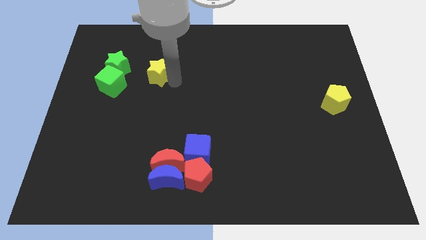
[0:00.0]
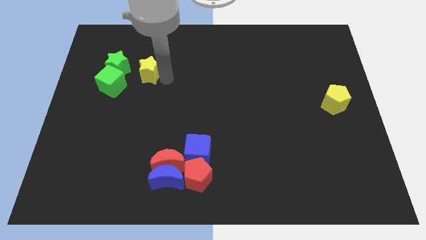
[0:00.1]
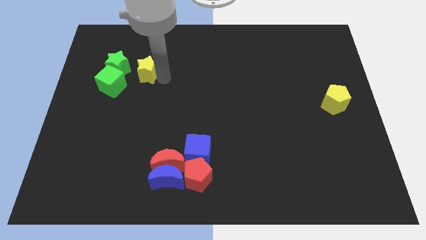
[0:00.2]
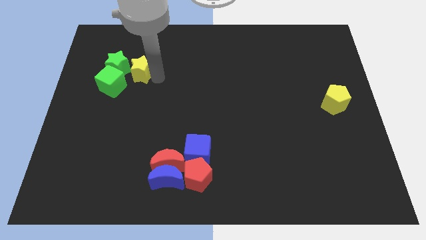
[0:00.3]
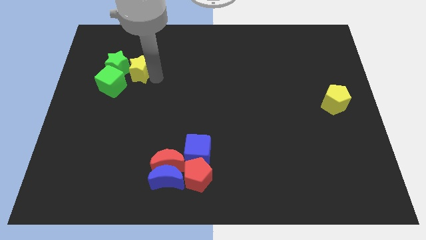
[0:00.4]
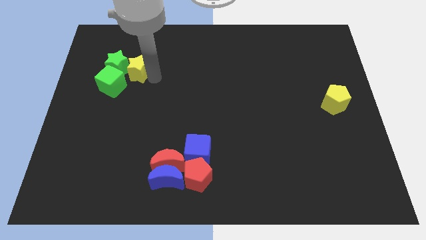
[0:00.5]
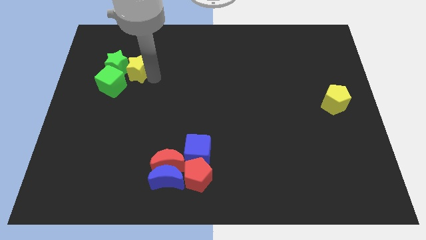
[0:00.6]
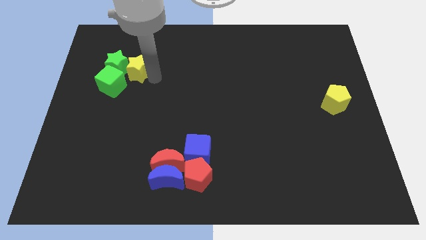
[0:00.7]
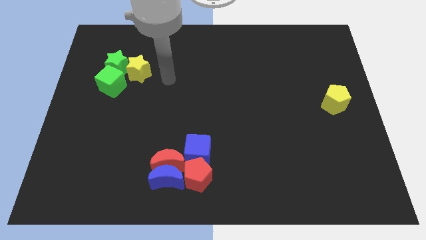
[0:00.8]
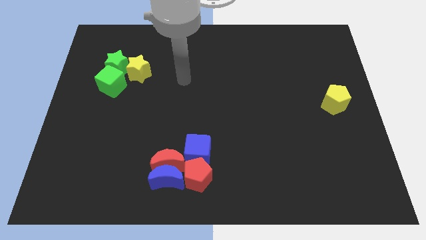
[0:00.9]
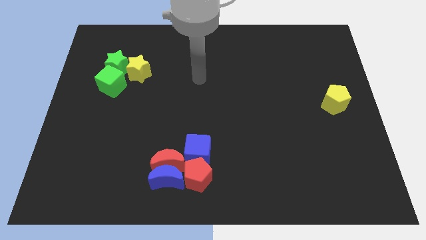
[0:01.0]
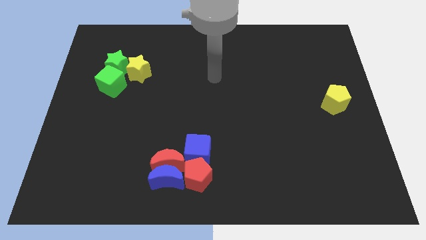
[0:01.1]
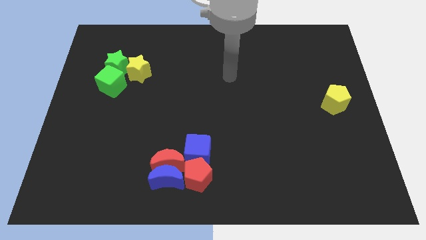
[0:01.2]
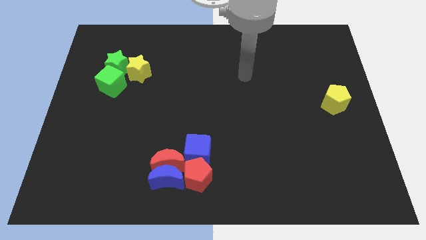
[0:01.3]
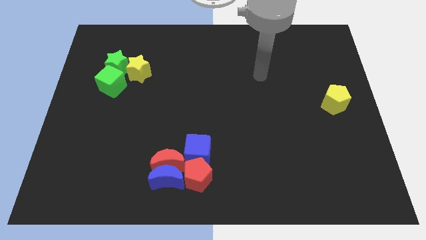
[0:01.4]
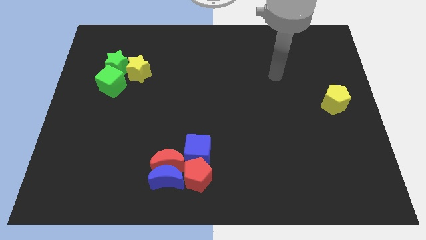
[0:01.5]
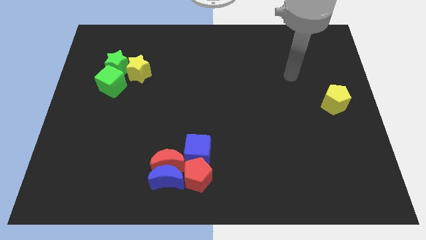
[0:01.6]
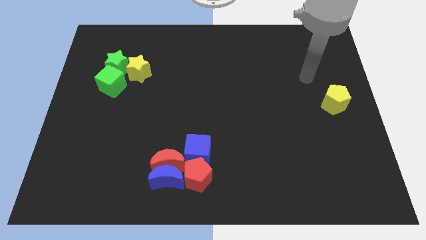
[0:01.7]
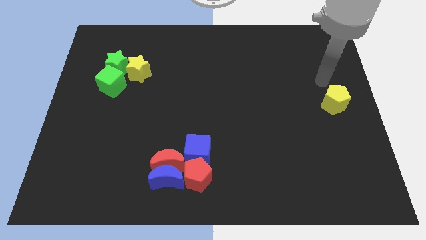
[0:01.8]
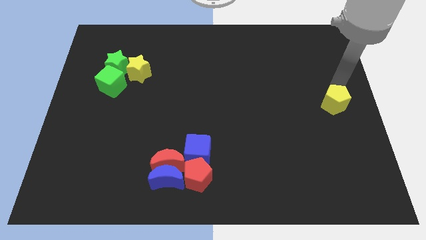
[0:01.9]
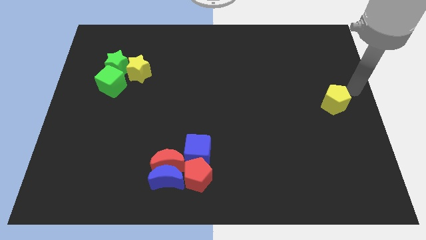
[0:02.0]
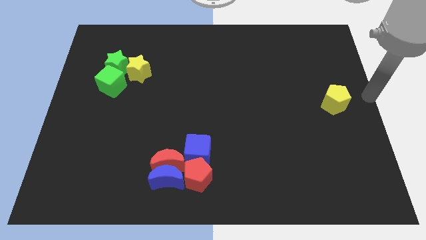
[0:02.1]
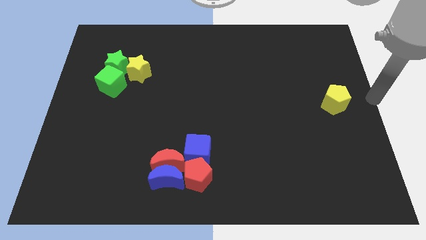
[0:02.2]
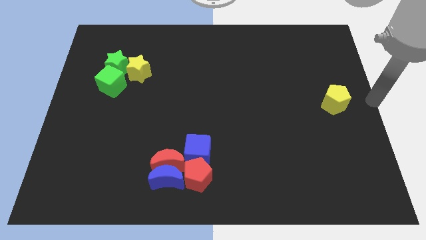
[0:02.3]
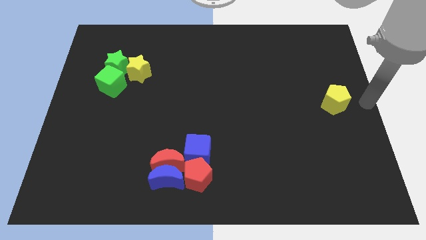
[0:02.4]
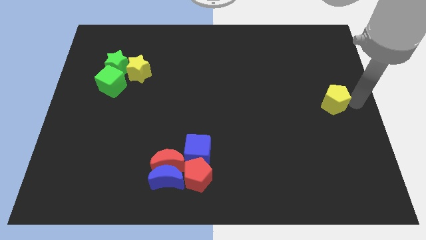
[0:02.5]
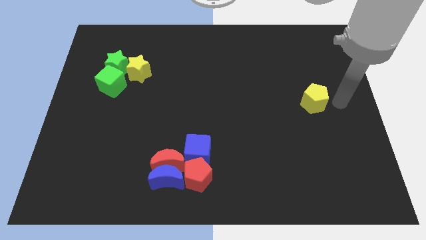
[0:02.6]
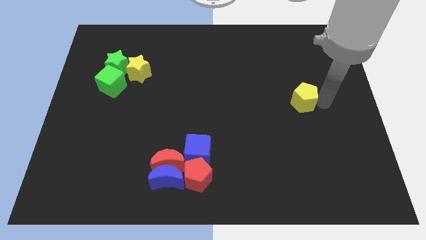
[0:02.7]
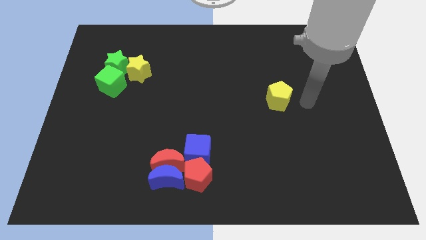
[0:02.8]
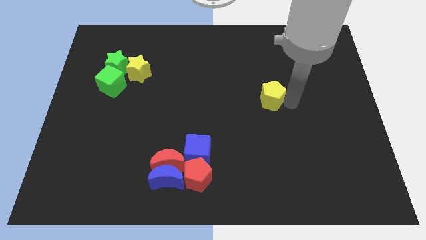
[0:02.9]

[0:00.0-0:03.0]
slightly move the yellow pentagon towards the left

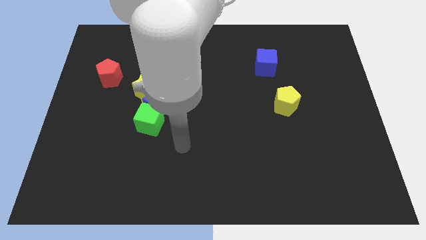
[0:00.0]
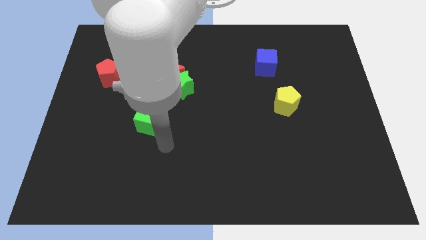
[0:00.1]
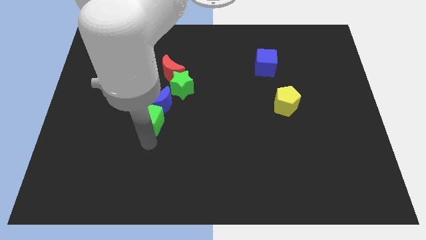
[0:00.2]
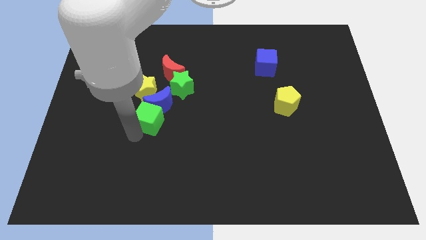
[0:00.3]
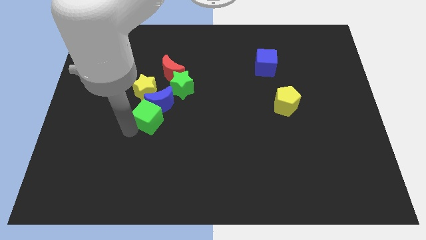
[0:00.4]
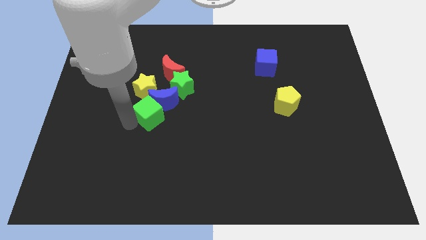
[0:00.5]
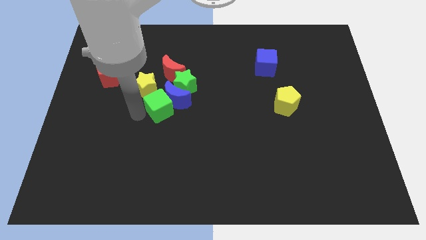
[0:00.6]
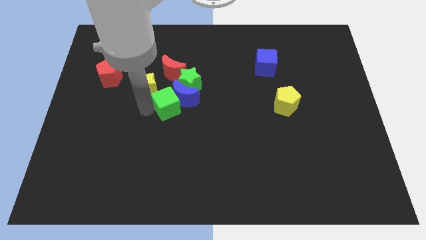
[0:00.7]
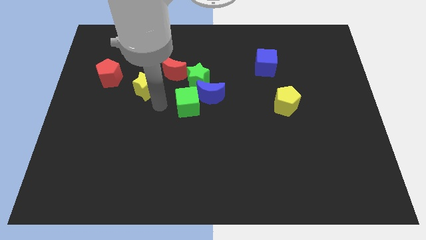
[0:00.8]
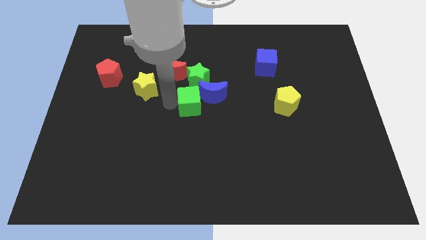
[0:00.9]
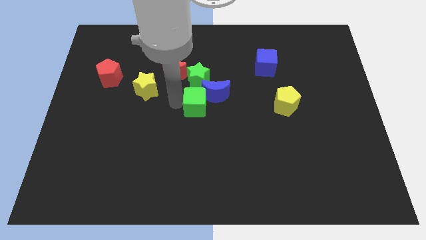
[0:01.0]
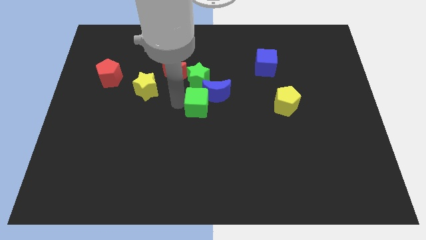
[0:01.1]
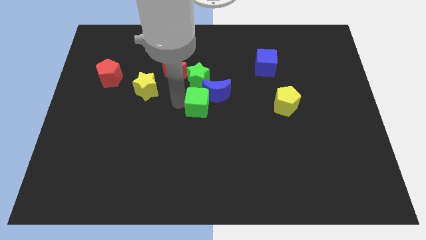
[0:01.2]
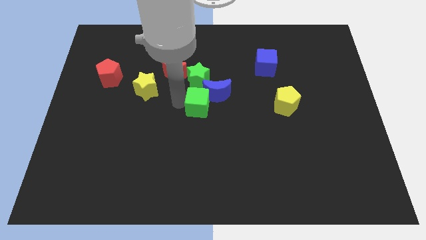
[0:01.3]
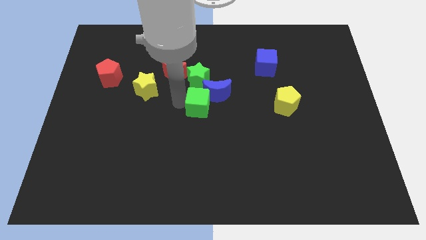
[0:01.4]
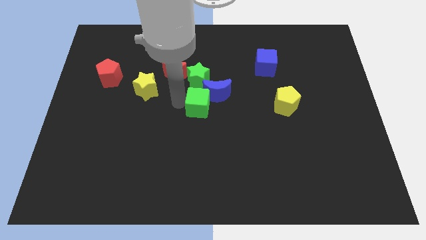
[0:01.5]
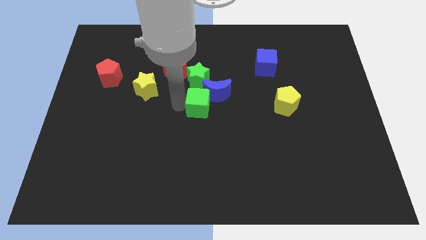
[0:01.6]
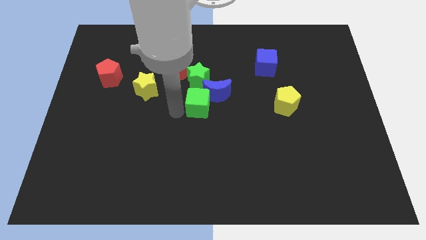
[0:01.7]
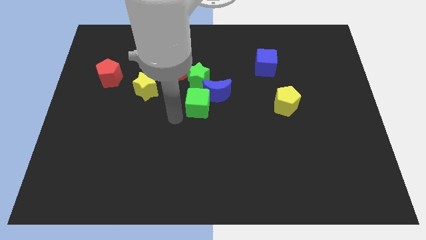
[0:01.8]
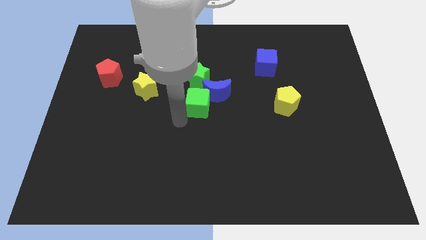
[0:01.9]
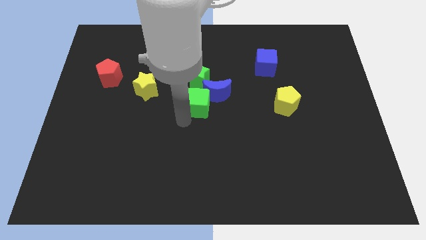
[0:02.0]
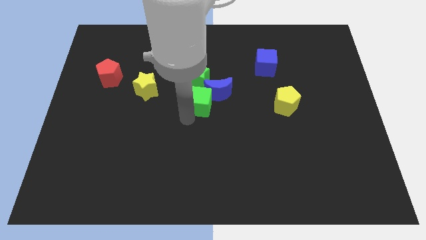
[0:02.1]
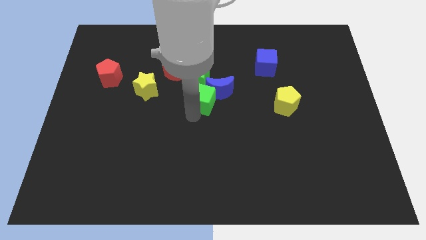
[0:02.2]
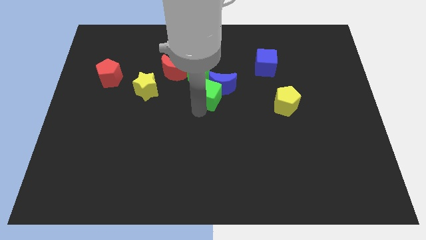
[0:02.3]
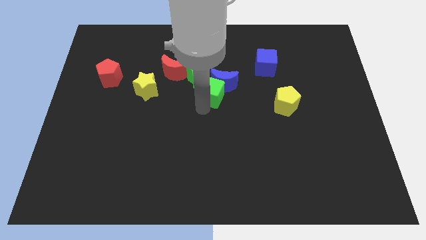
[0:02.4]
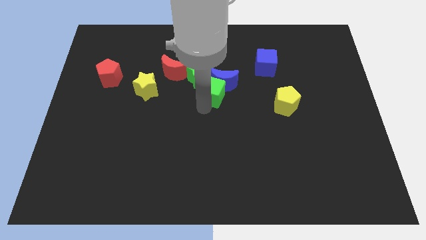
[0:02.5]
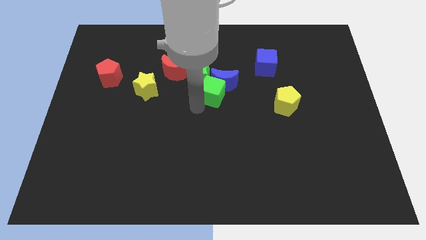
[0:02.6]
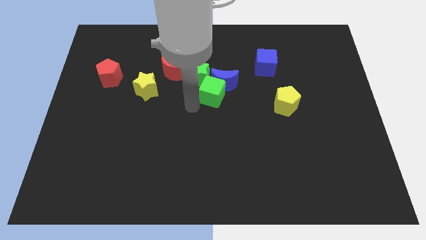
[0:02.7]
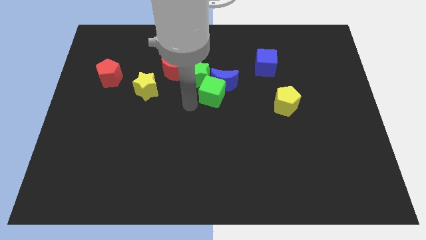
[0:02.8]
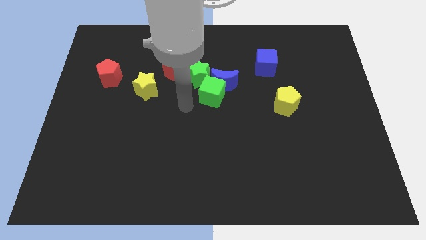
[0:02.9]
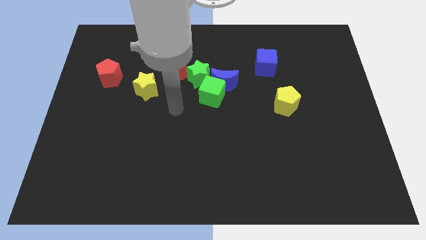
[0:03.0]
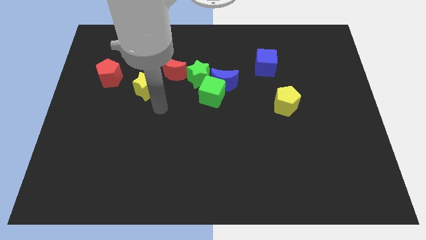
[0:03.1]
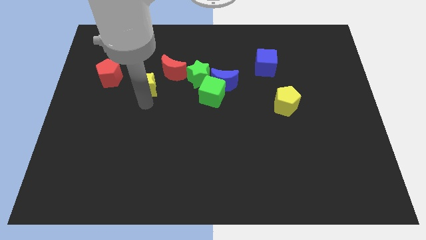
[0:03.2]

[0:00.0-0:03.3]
push the green cube into the blue crescent

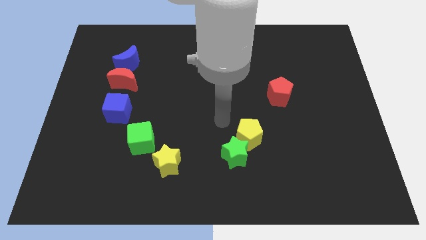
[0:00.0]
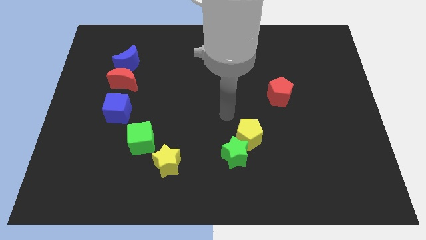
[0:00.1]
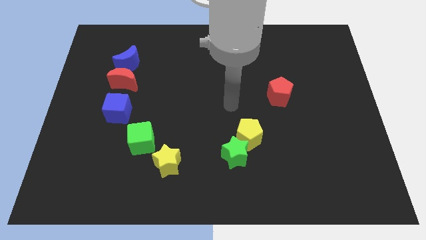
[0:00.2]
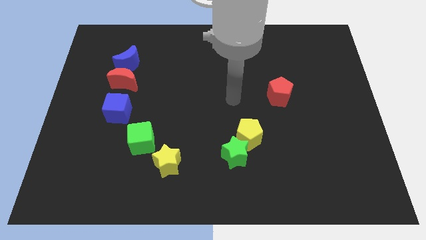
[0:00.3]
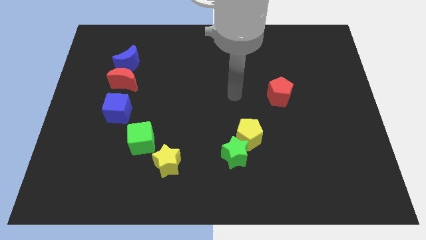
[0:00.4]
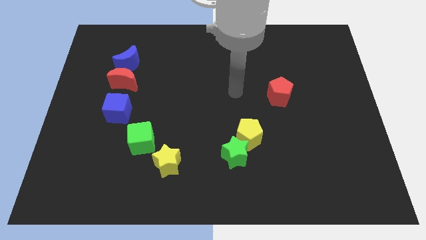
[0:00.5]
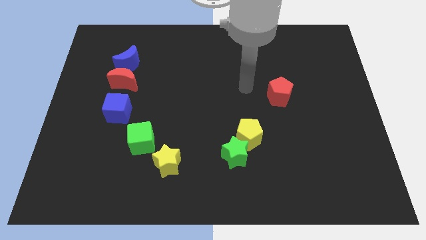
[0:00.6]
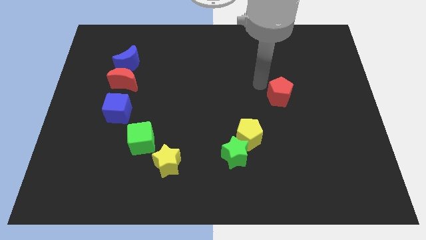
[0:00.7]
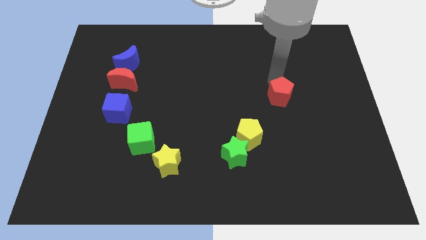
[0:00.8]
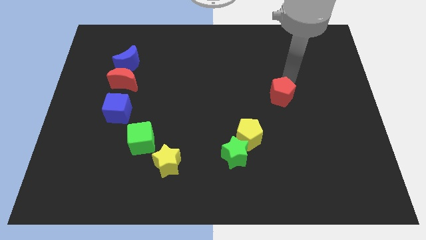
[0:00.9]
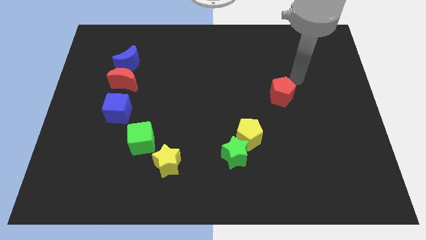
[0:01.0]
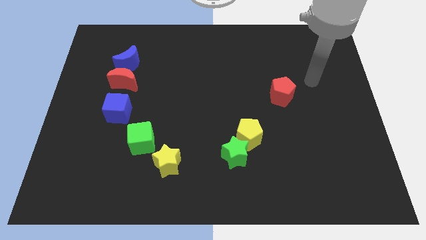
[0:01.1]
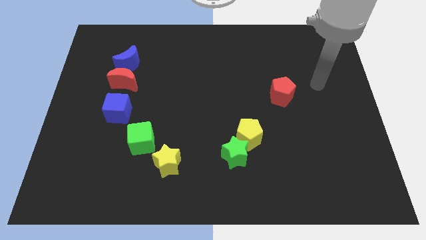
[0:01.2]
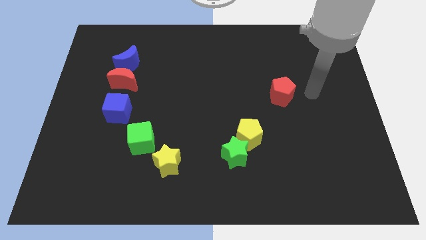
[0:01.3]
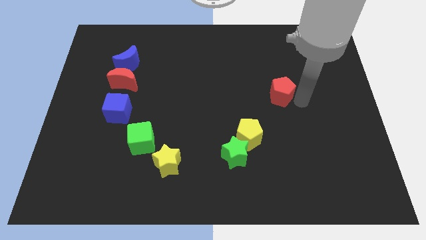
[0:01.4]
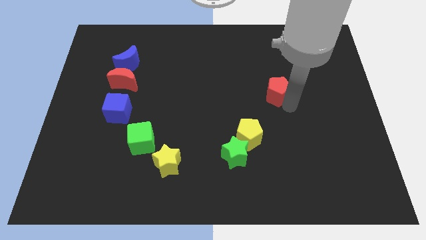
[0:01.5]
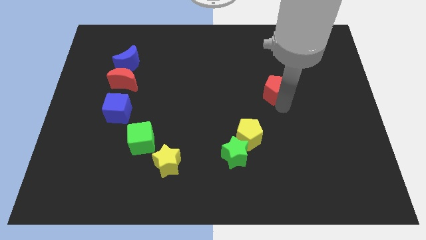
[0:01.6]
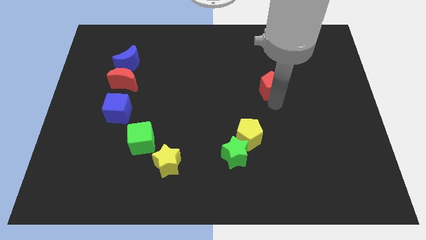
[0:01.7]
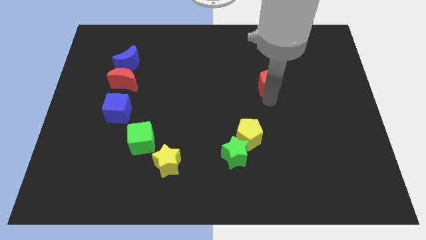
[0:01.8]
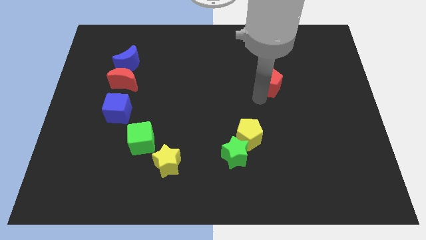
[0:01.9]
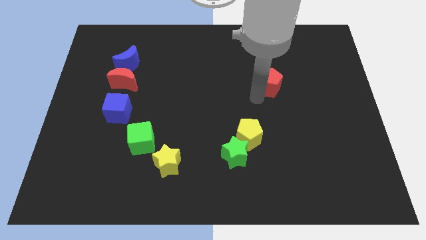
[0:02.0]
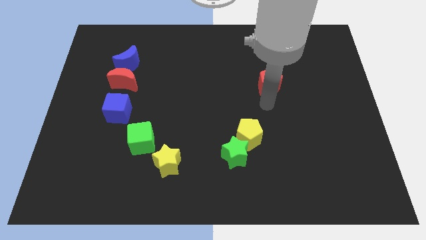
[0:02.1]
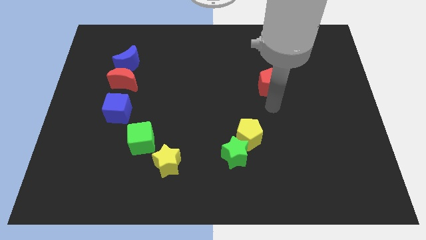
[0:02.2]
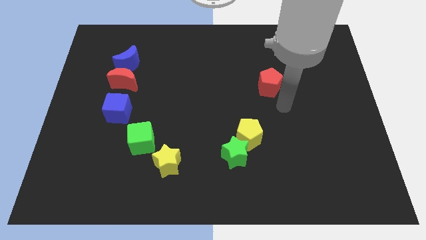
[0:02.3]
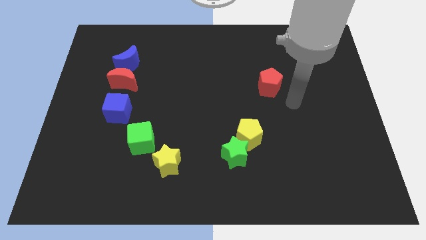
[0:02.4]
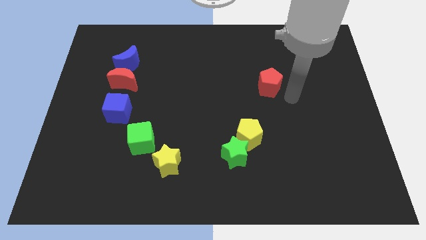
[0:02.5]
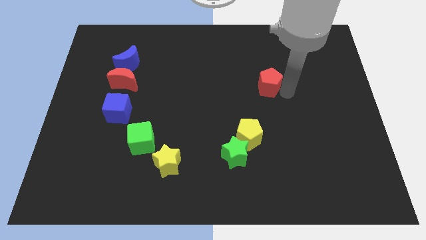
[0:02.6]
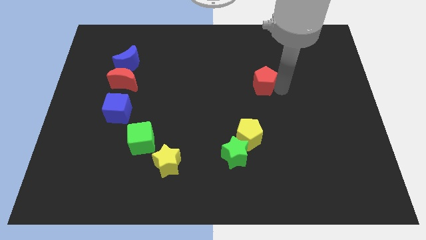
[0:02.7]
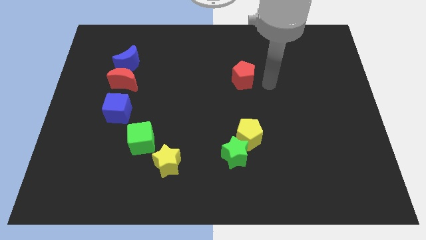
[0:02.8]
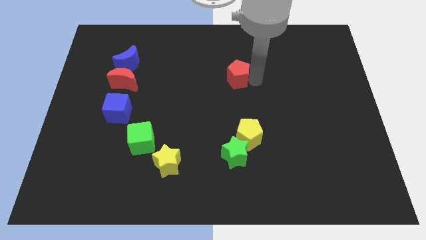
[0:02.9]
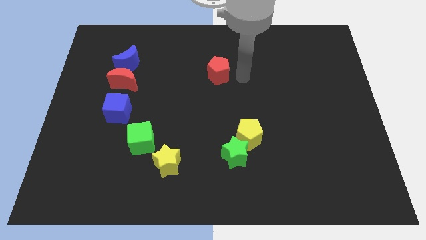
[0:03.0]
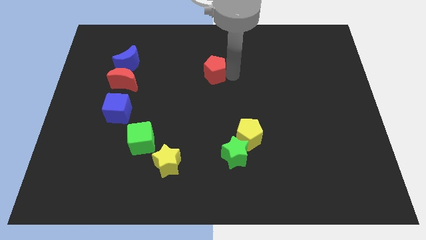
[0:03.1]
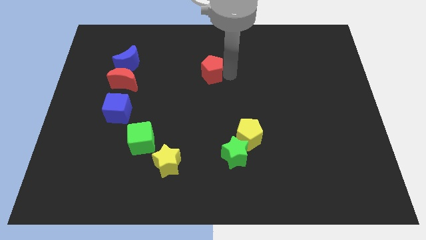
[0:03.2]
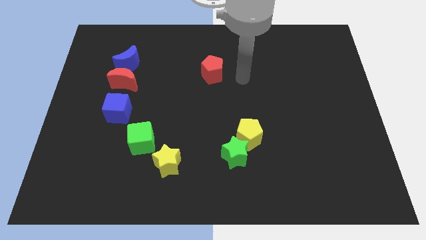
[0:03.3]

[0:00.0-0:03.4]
move red pentagon to the right side of the blue moon and red moon
